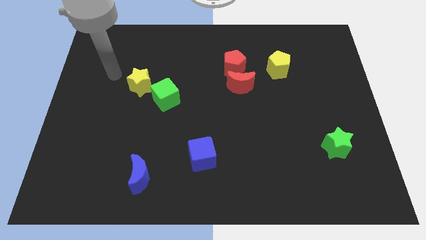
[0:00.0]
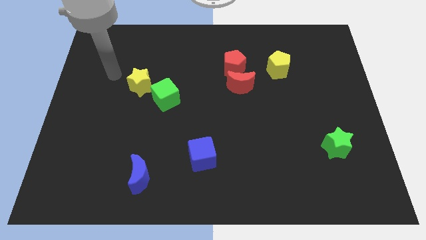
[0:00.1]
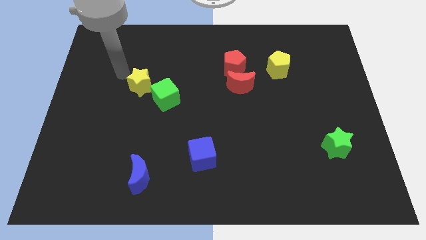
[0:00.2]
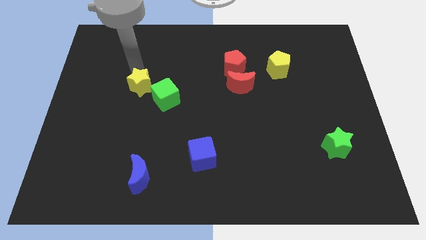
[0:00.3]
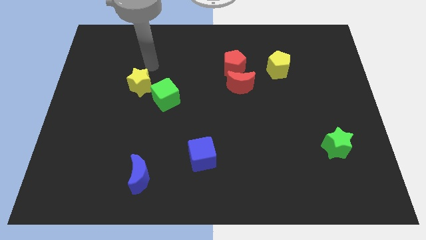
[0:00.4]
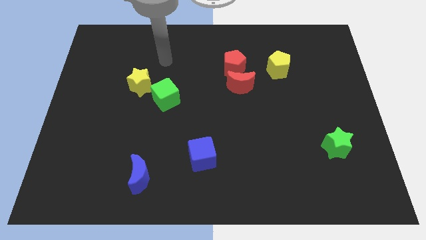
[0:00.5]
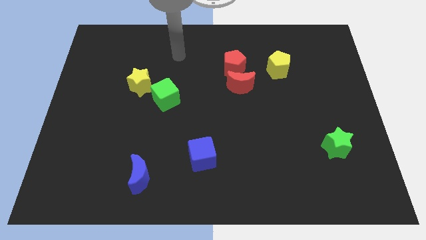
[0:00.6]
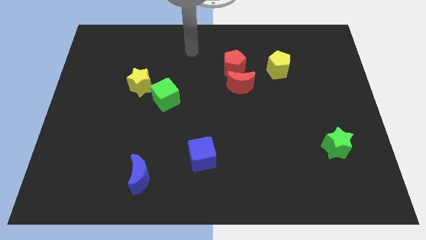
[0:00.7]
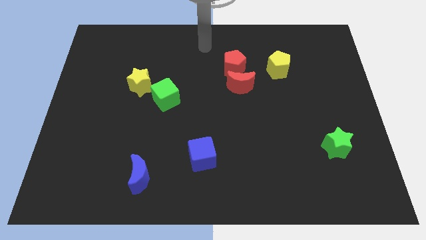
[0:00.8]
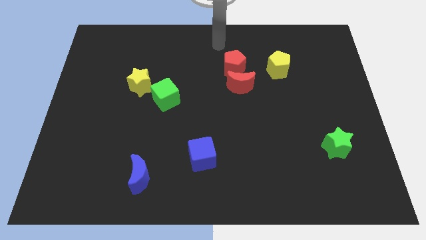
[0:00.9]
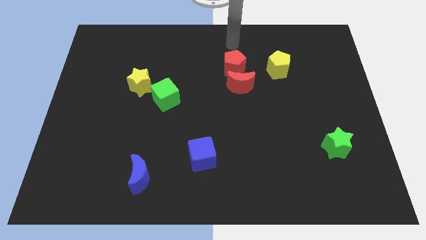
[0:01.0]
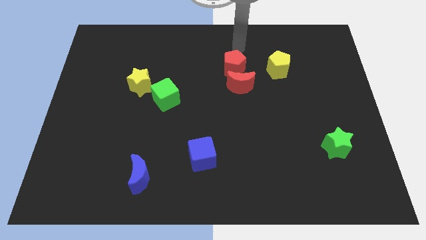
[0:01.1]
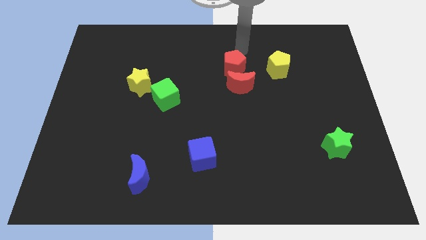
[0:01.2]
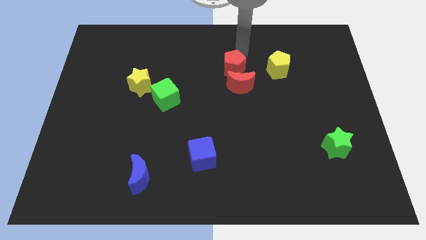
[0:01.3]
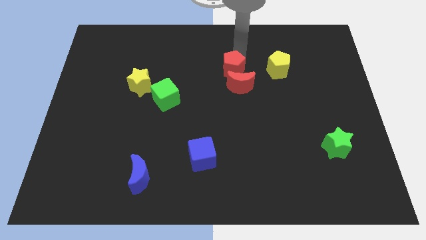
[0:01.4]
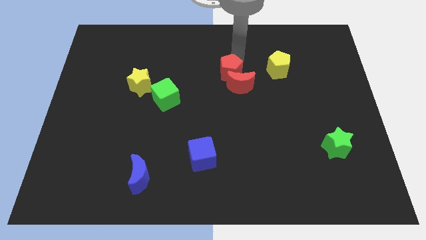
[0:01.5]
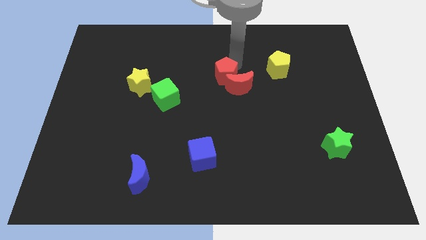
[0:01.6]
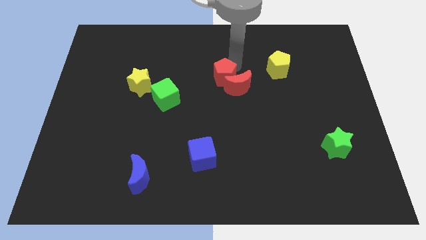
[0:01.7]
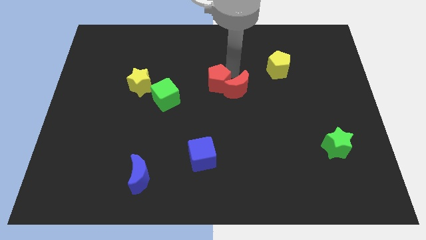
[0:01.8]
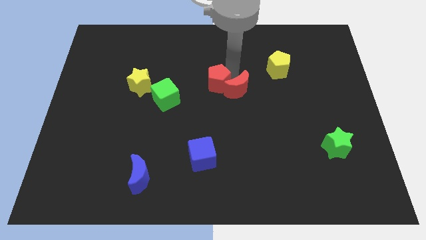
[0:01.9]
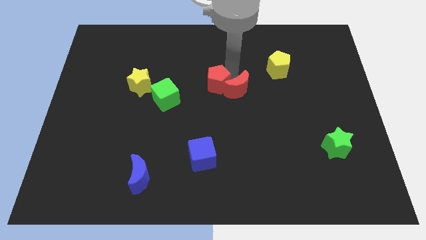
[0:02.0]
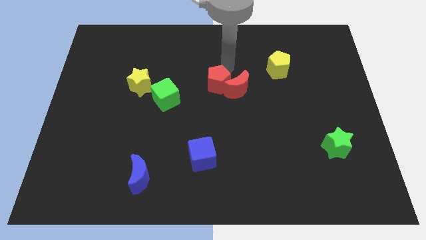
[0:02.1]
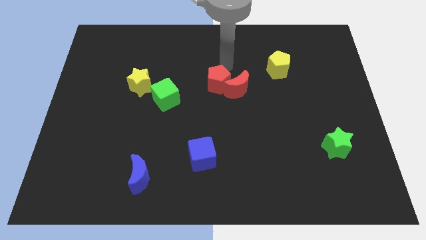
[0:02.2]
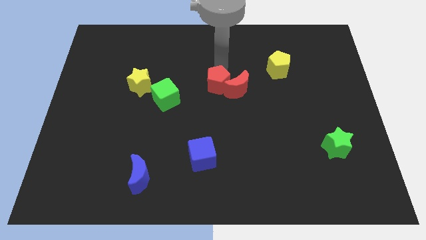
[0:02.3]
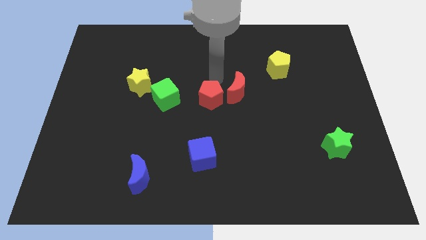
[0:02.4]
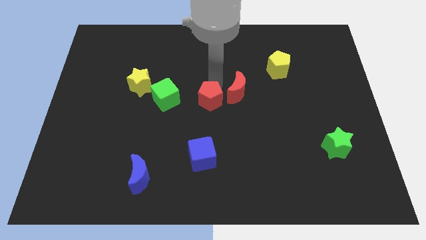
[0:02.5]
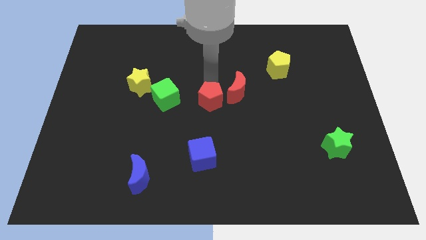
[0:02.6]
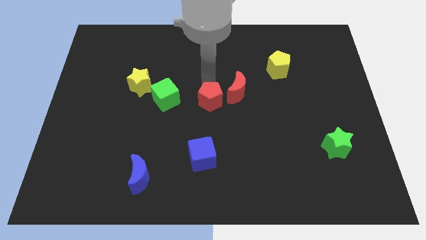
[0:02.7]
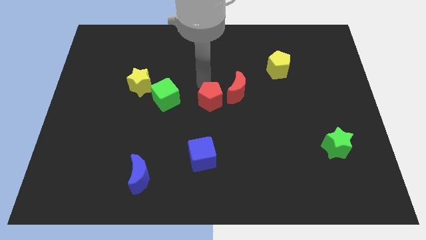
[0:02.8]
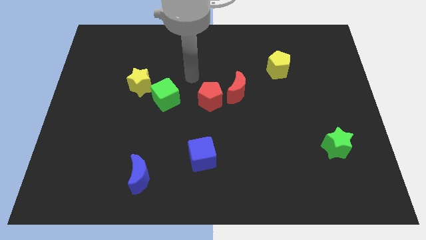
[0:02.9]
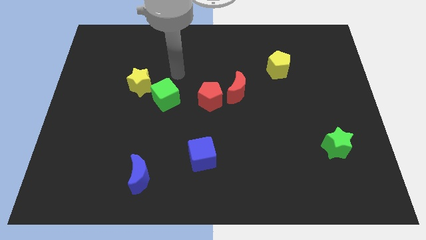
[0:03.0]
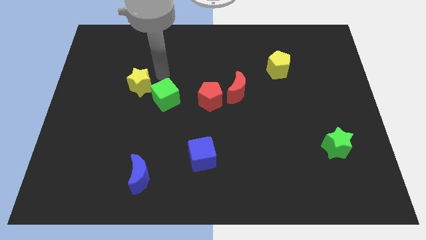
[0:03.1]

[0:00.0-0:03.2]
move the red pentagon to the center of the board

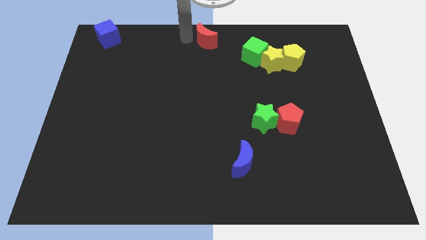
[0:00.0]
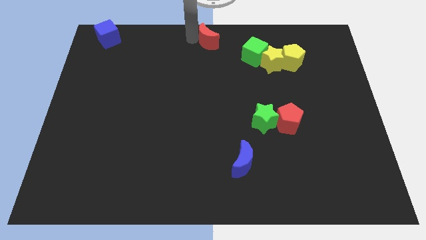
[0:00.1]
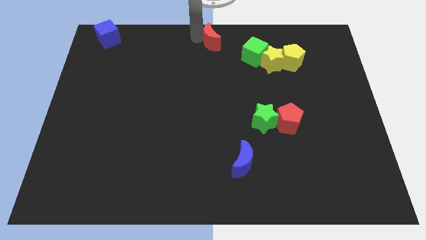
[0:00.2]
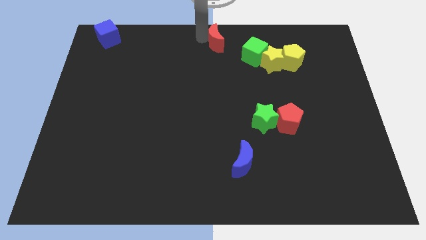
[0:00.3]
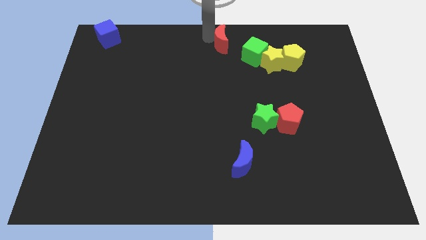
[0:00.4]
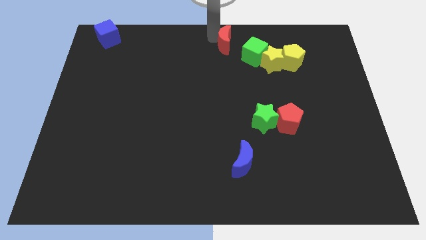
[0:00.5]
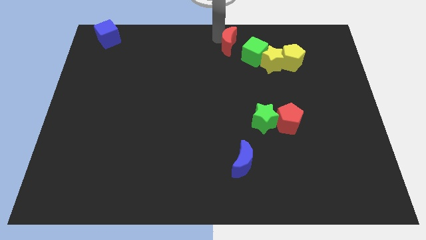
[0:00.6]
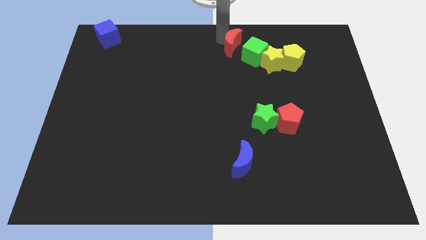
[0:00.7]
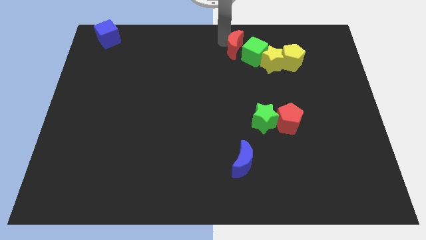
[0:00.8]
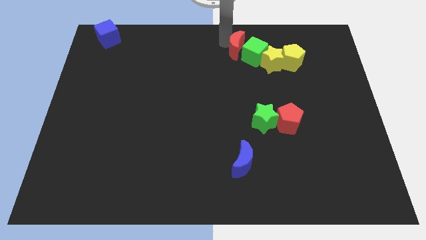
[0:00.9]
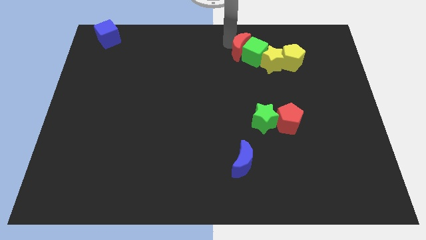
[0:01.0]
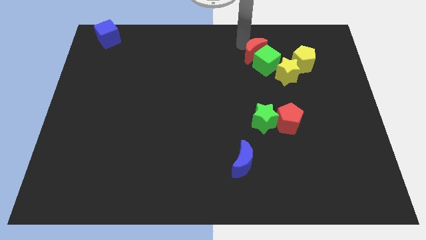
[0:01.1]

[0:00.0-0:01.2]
move the red crescent to the left of the green cube

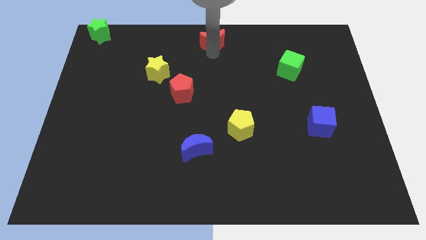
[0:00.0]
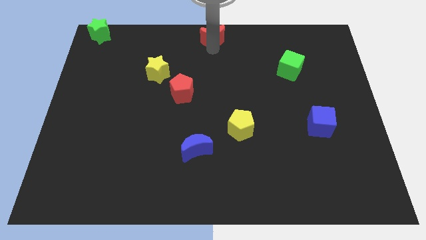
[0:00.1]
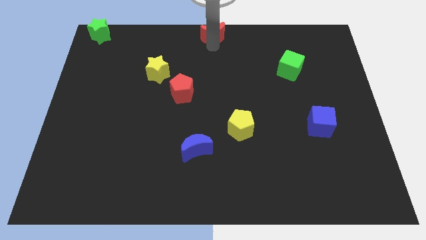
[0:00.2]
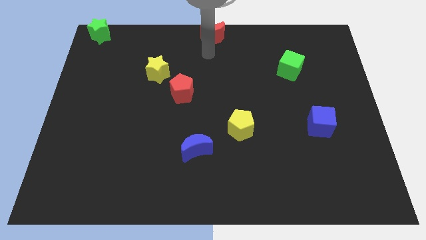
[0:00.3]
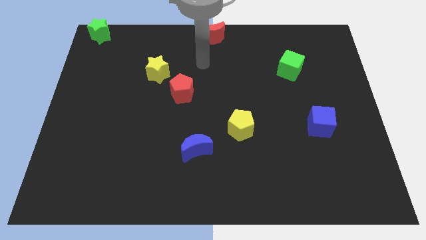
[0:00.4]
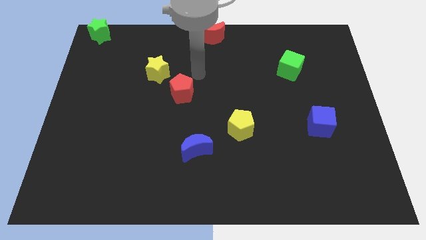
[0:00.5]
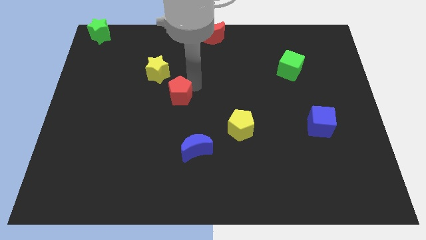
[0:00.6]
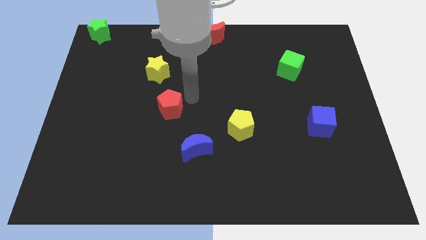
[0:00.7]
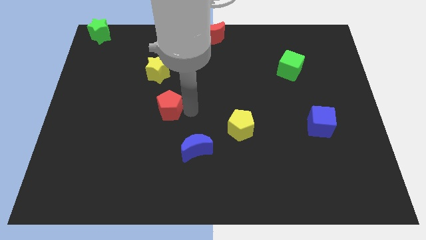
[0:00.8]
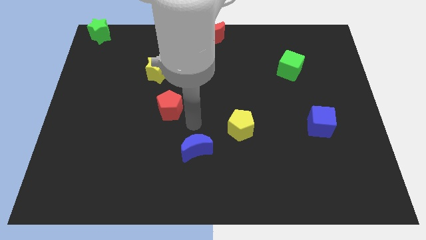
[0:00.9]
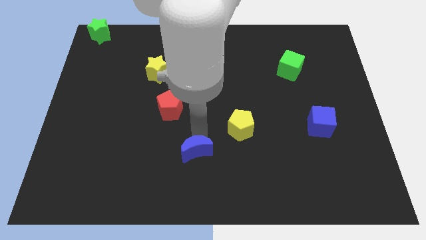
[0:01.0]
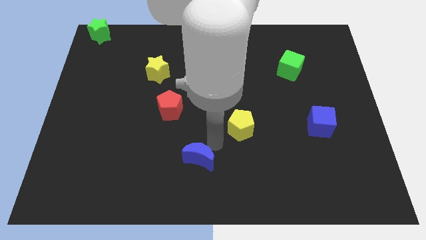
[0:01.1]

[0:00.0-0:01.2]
place the red pentagon in between the yellow star and blue moon

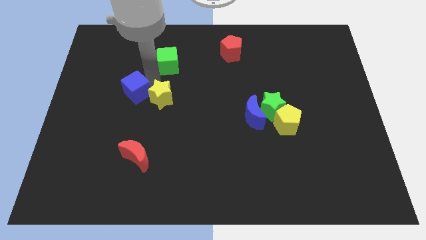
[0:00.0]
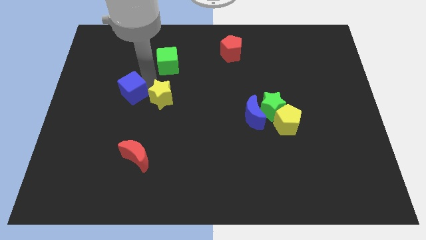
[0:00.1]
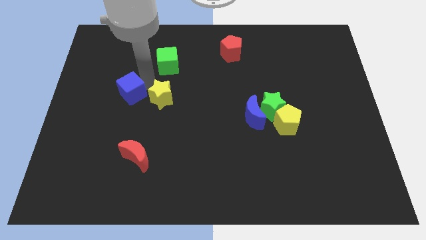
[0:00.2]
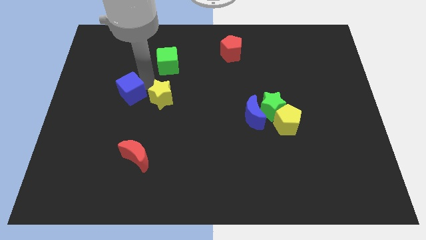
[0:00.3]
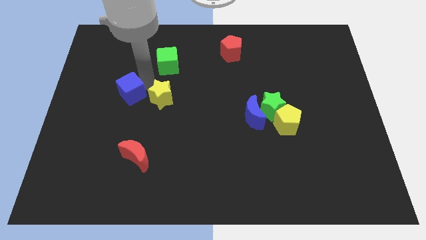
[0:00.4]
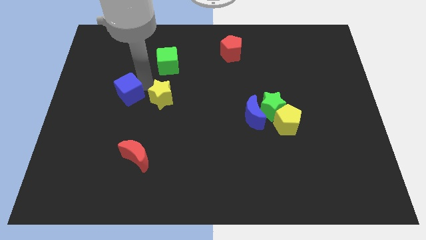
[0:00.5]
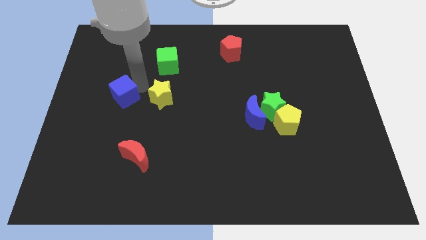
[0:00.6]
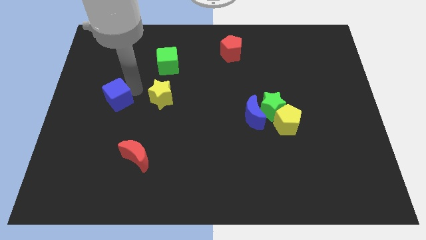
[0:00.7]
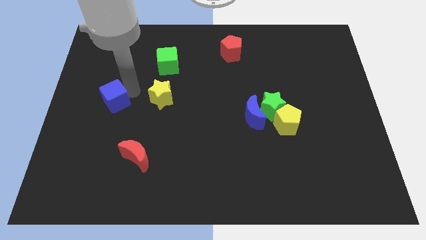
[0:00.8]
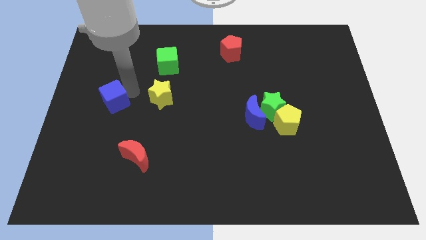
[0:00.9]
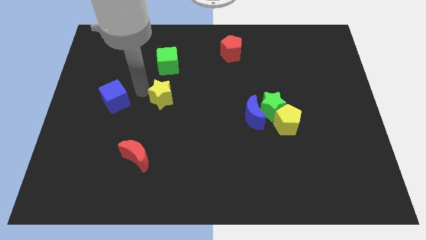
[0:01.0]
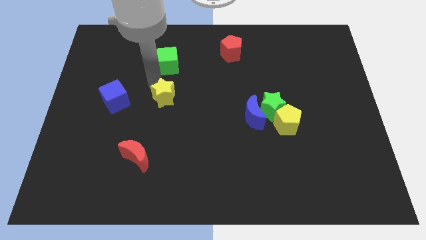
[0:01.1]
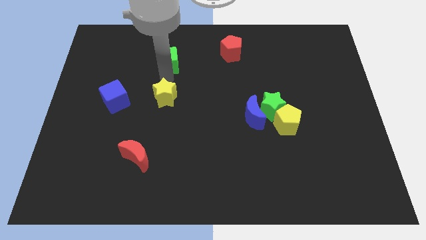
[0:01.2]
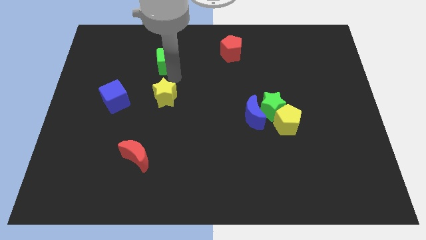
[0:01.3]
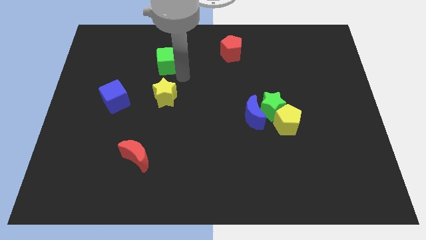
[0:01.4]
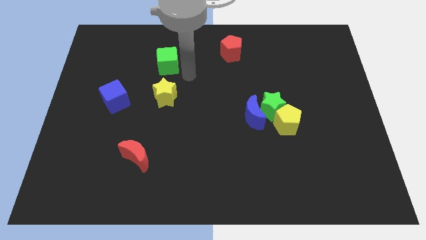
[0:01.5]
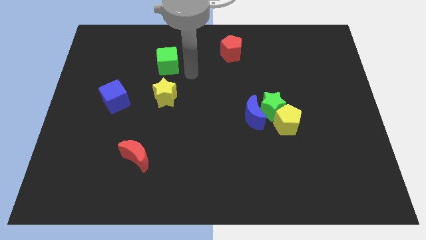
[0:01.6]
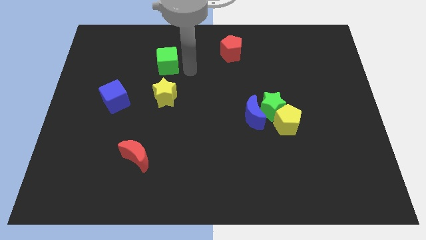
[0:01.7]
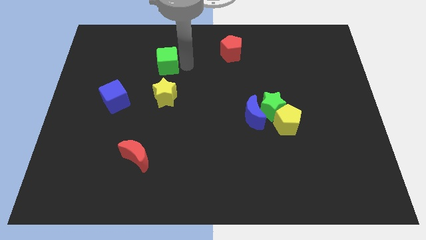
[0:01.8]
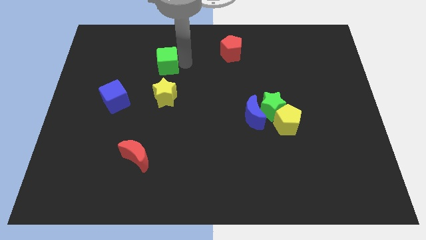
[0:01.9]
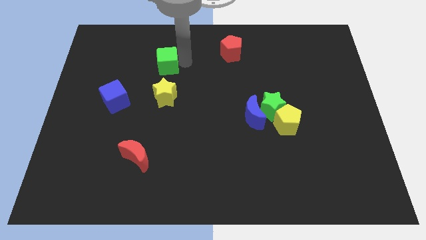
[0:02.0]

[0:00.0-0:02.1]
separate blue cube from the yellow star

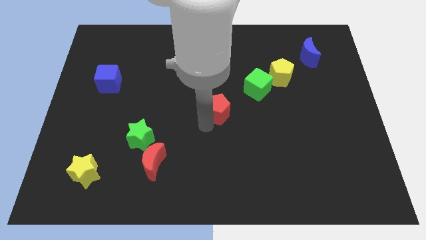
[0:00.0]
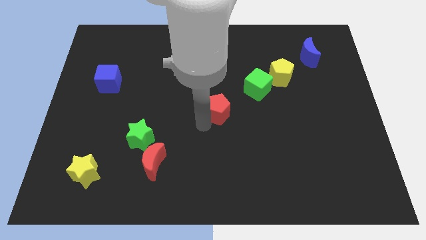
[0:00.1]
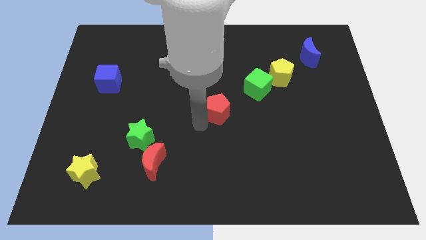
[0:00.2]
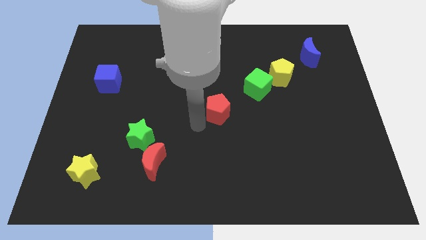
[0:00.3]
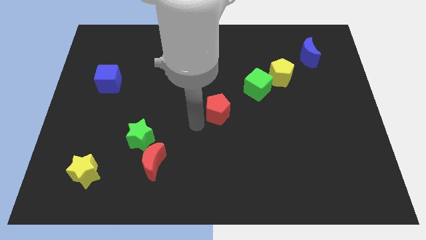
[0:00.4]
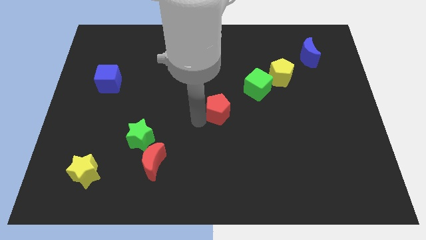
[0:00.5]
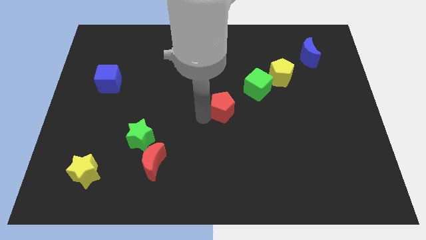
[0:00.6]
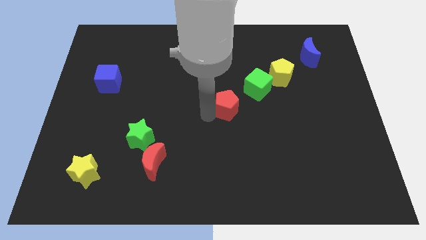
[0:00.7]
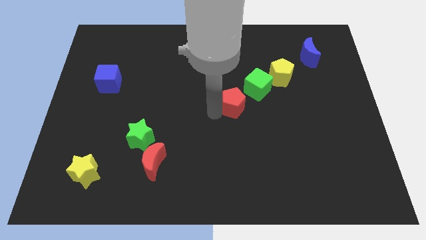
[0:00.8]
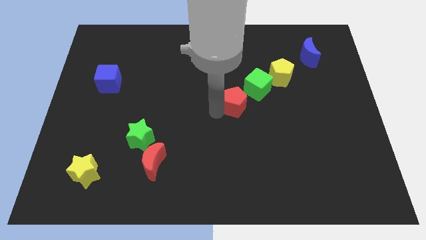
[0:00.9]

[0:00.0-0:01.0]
push the red pentagon diagonally to the green cube

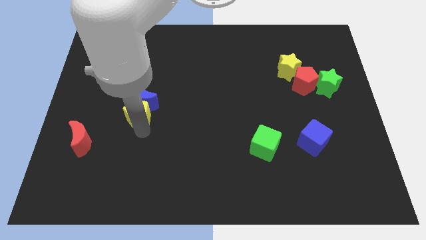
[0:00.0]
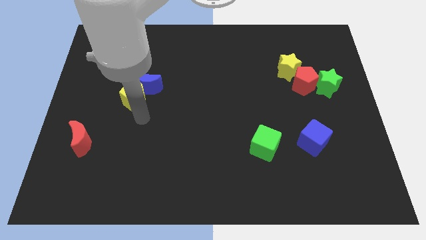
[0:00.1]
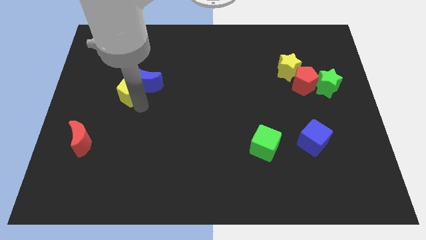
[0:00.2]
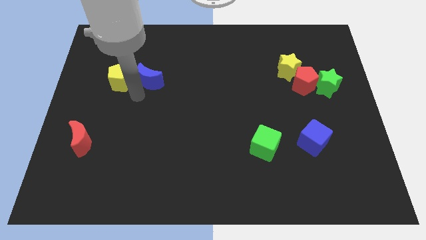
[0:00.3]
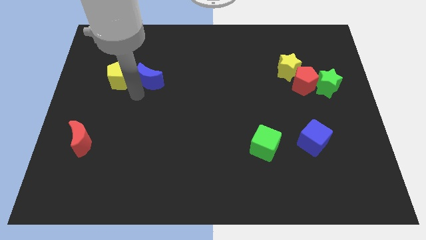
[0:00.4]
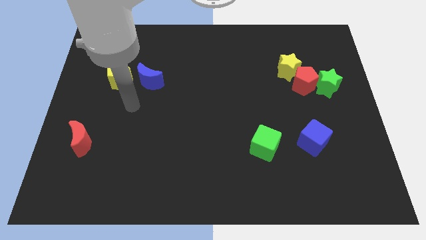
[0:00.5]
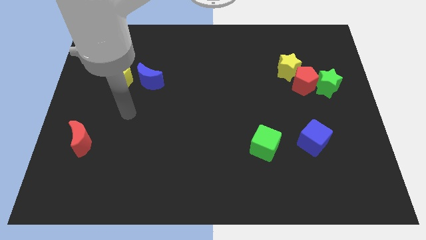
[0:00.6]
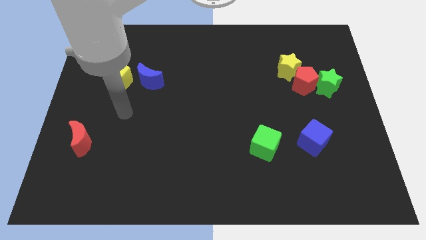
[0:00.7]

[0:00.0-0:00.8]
separate the yellow pentagon and blue moon
